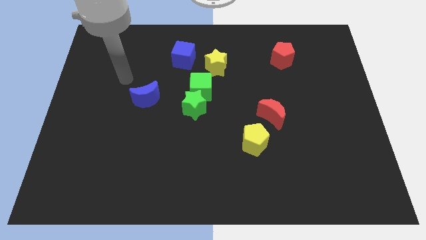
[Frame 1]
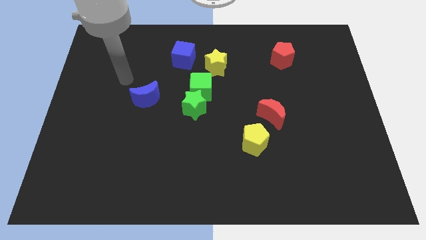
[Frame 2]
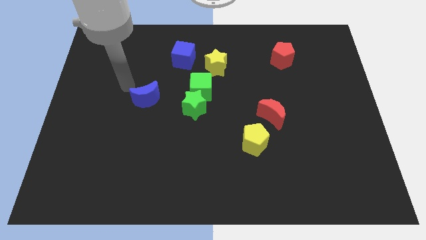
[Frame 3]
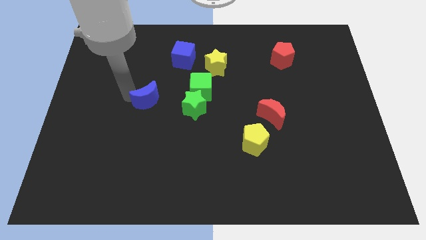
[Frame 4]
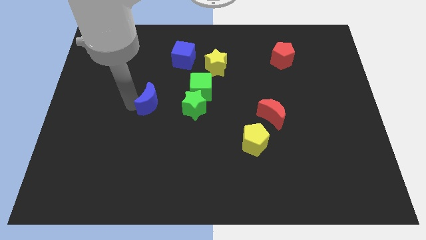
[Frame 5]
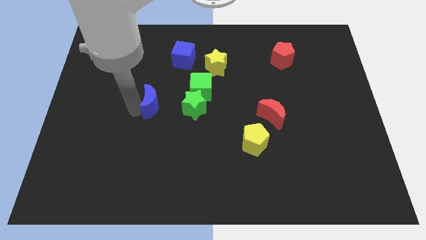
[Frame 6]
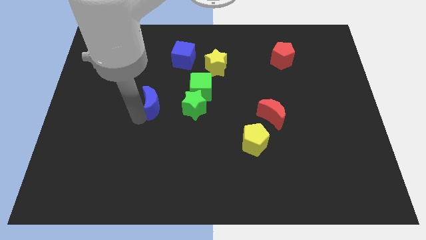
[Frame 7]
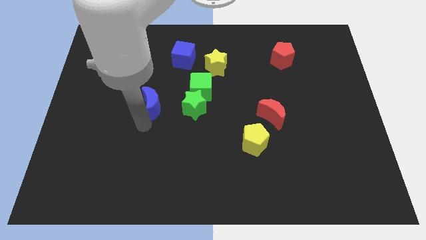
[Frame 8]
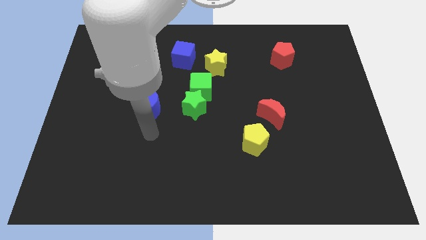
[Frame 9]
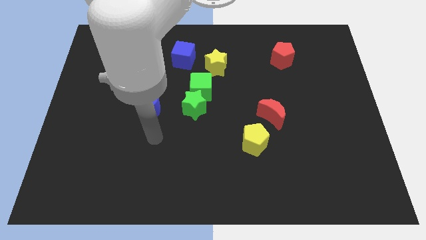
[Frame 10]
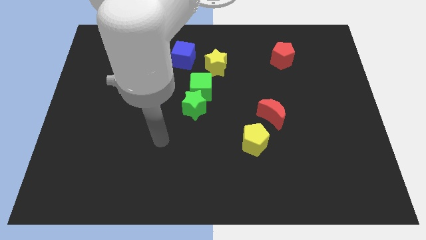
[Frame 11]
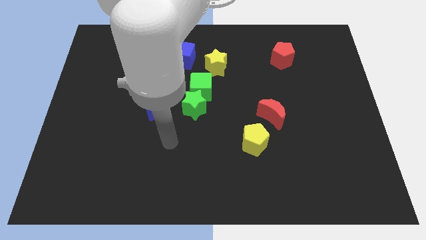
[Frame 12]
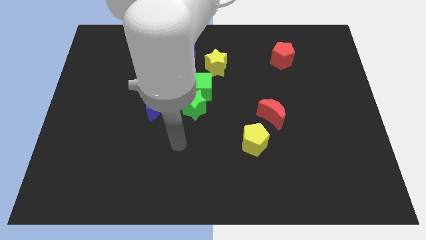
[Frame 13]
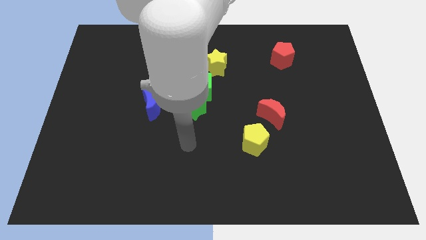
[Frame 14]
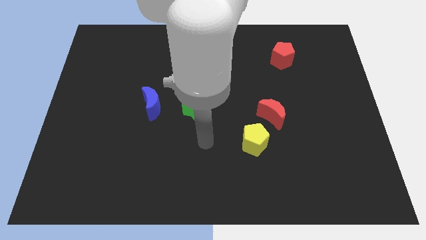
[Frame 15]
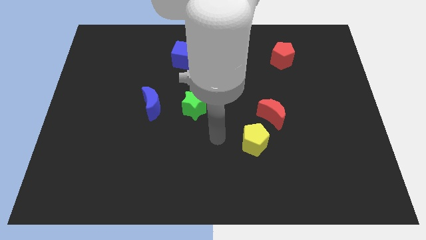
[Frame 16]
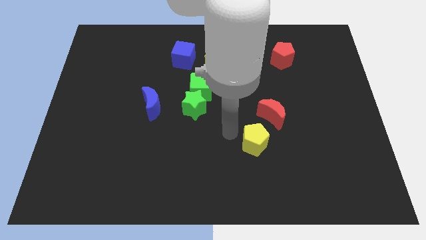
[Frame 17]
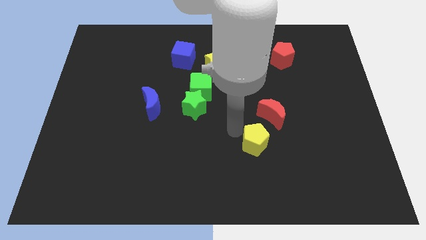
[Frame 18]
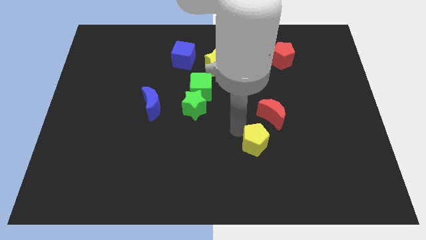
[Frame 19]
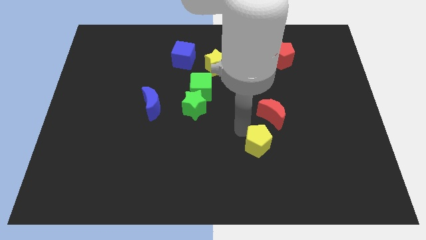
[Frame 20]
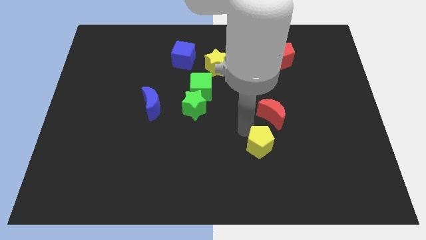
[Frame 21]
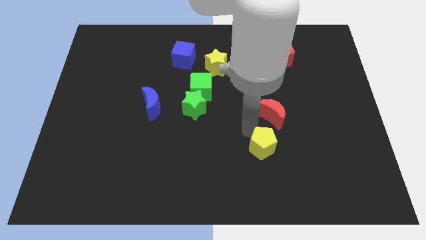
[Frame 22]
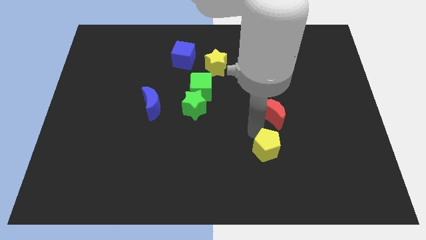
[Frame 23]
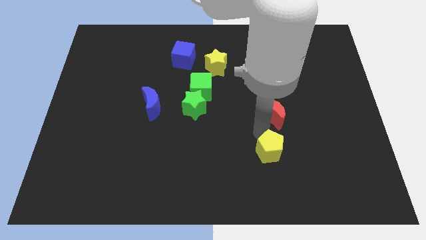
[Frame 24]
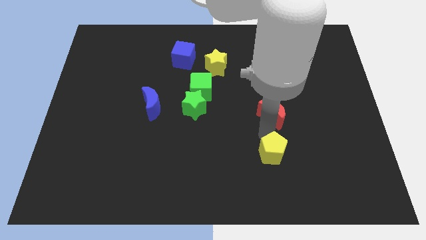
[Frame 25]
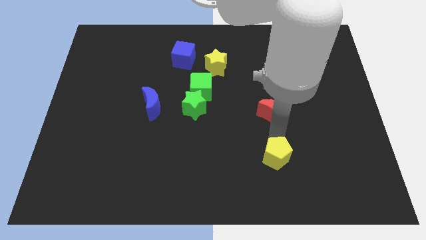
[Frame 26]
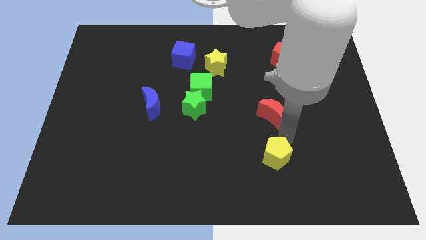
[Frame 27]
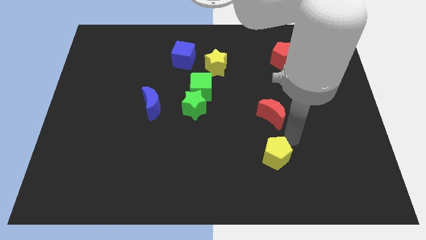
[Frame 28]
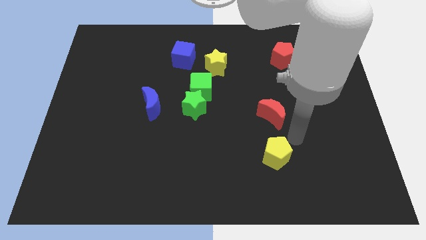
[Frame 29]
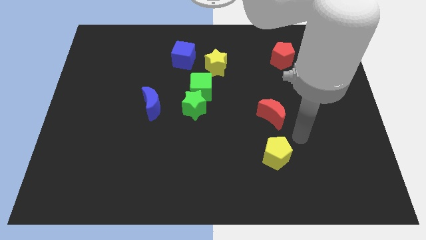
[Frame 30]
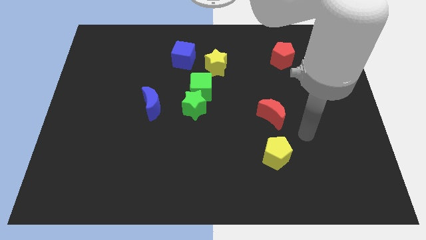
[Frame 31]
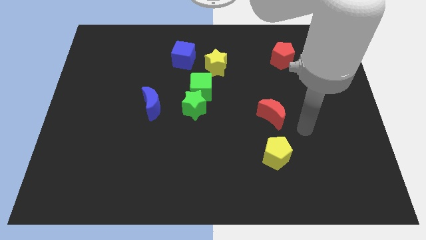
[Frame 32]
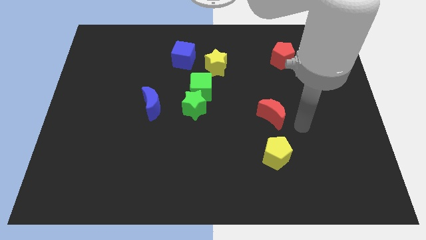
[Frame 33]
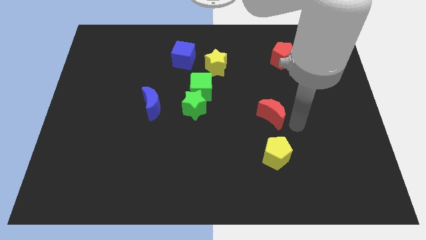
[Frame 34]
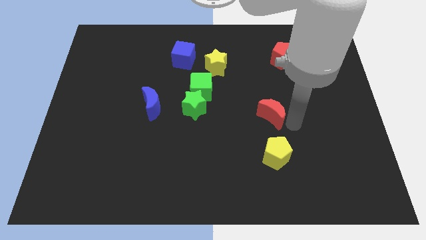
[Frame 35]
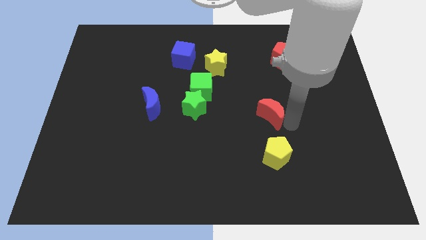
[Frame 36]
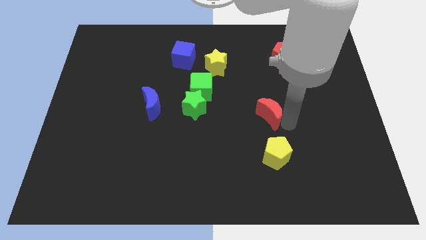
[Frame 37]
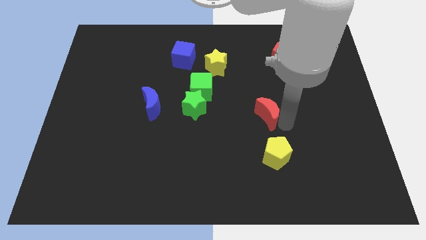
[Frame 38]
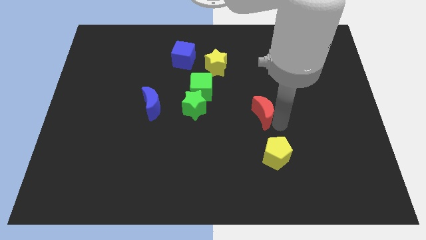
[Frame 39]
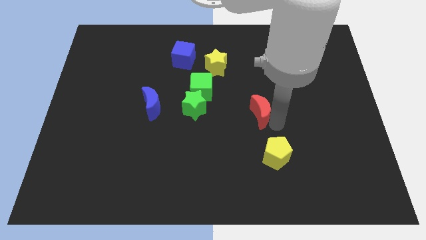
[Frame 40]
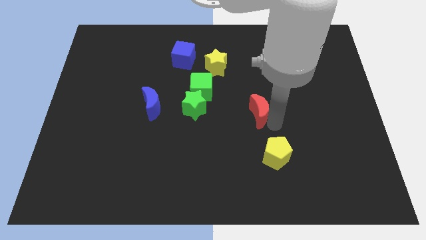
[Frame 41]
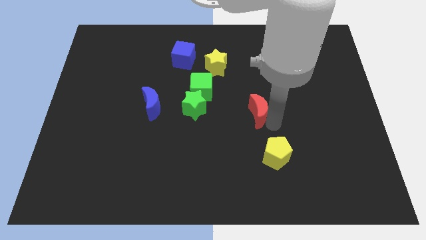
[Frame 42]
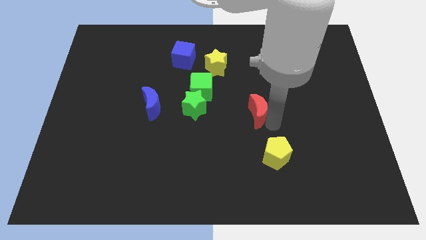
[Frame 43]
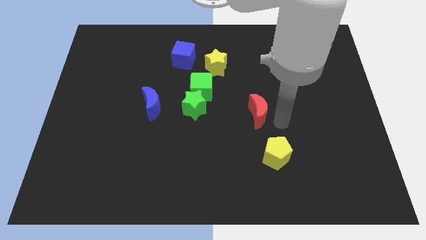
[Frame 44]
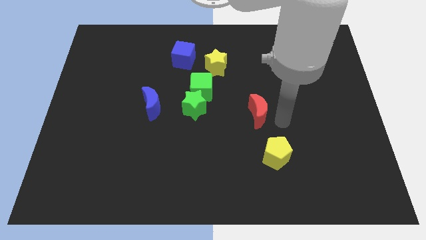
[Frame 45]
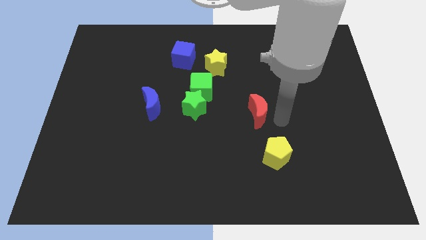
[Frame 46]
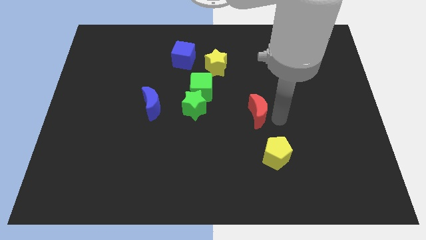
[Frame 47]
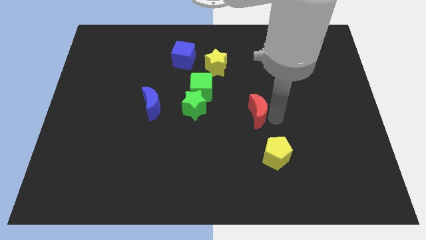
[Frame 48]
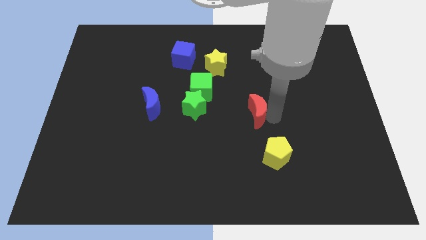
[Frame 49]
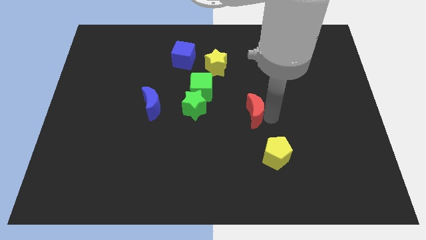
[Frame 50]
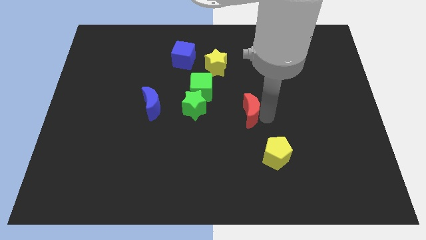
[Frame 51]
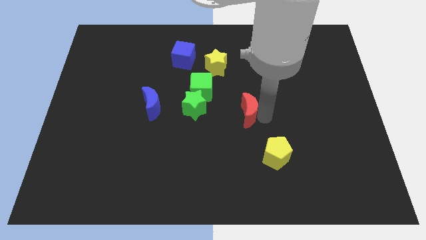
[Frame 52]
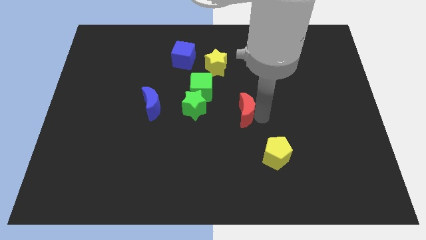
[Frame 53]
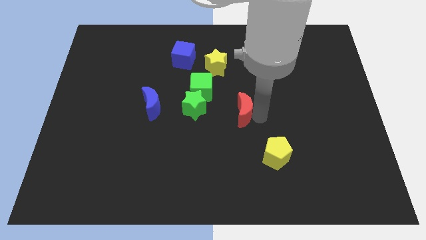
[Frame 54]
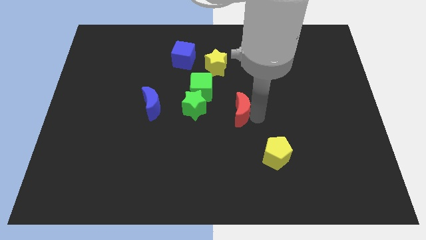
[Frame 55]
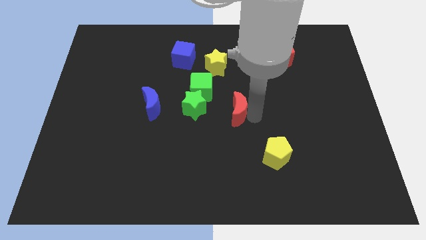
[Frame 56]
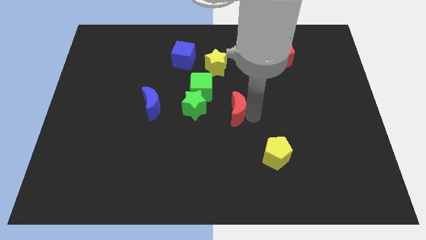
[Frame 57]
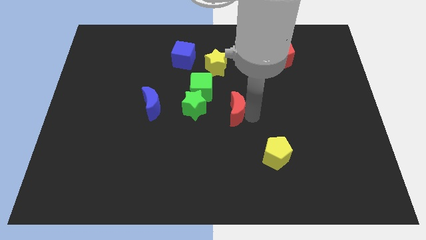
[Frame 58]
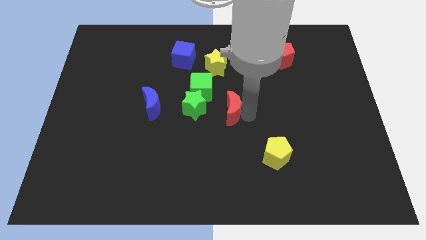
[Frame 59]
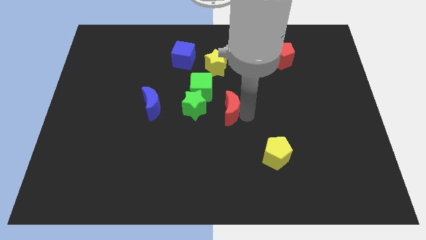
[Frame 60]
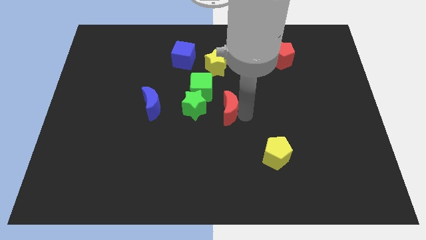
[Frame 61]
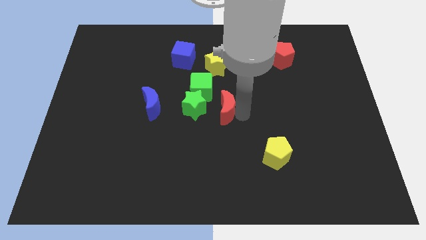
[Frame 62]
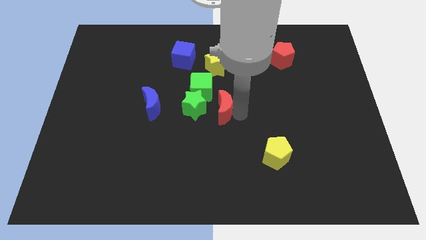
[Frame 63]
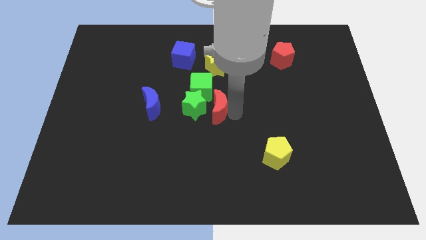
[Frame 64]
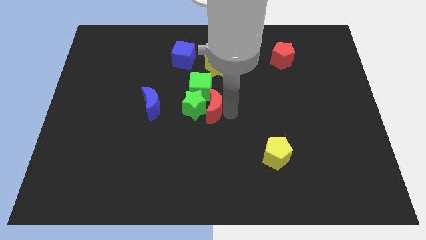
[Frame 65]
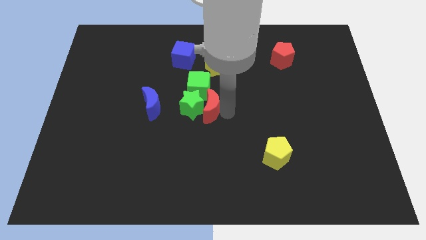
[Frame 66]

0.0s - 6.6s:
push the red moon close to the green star

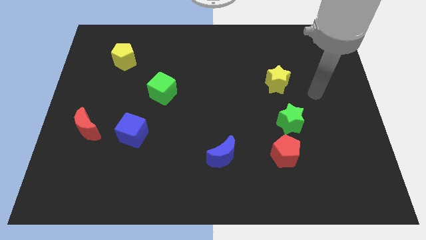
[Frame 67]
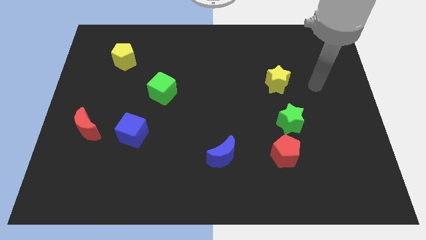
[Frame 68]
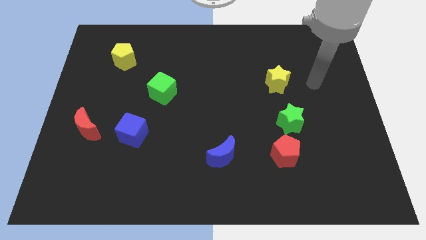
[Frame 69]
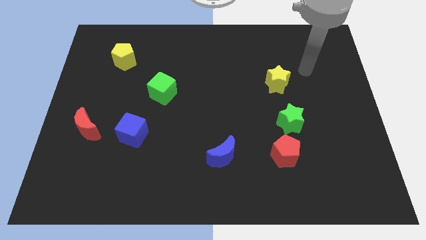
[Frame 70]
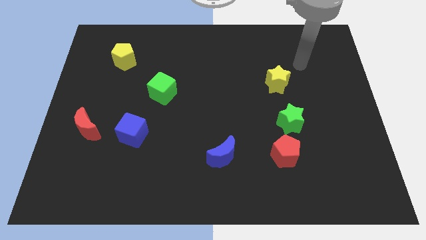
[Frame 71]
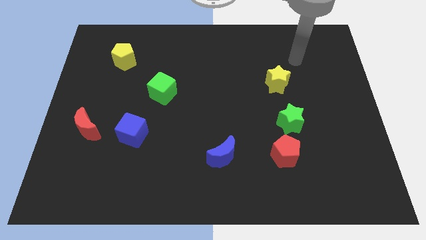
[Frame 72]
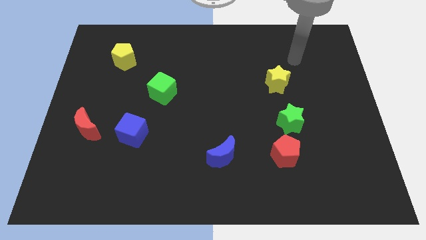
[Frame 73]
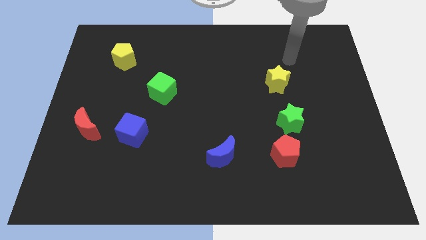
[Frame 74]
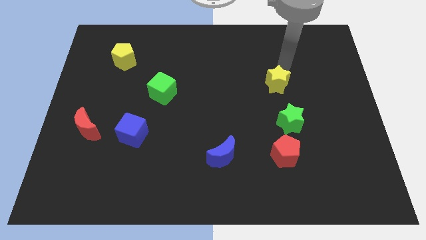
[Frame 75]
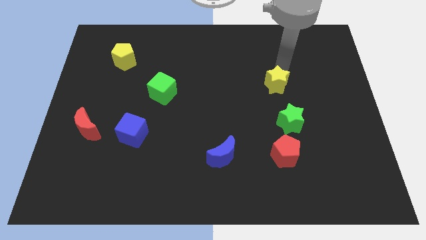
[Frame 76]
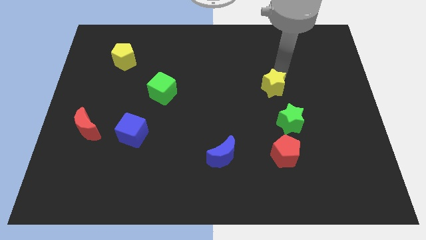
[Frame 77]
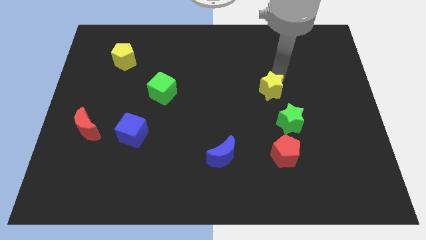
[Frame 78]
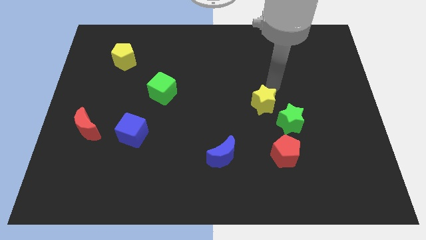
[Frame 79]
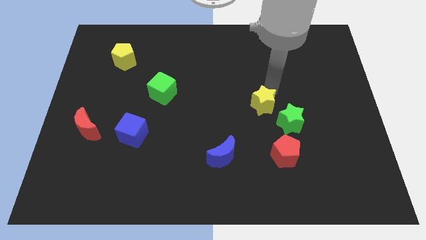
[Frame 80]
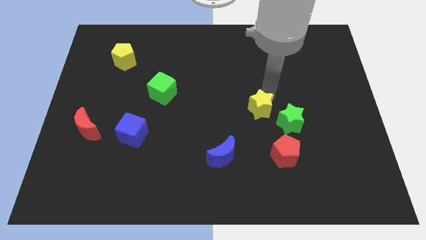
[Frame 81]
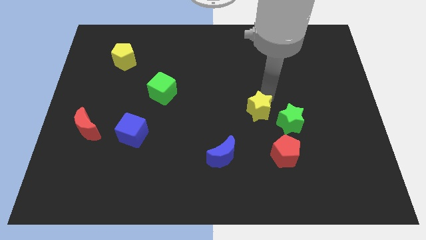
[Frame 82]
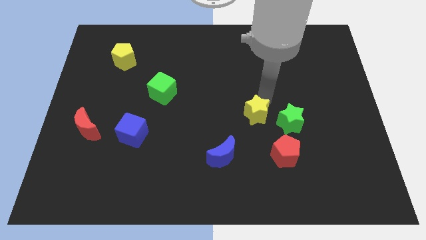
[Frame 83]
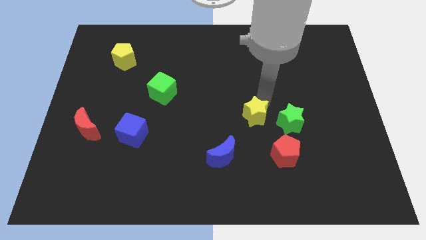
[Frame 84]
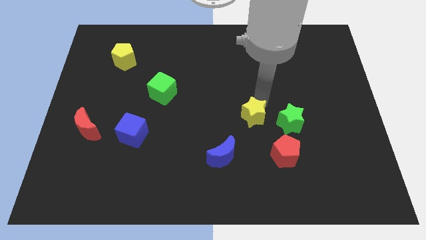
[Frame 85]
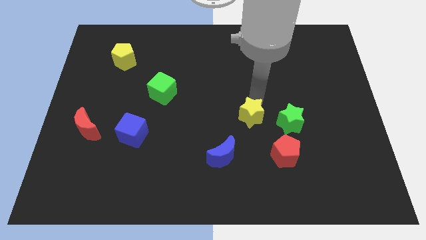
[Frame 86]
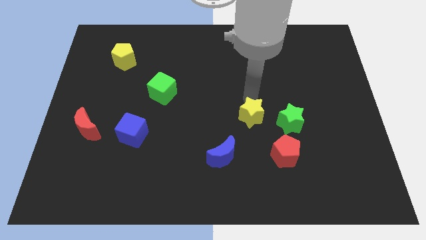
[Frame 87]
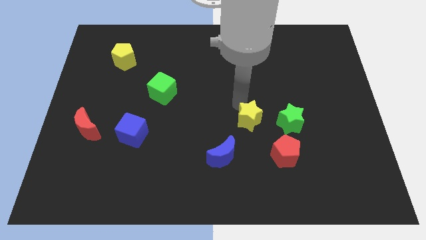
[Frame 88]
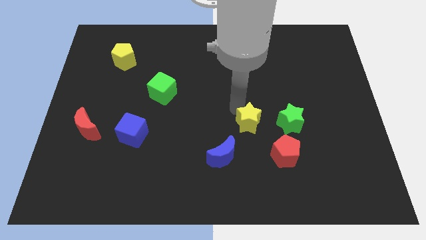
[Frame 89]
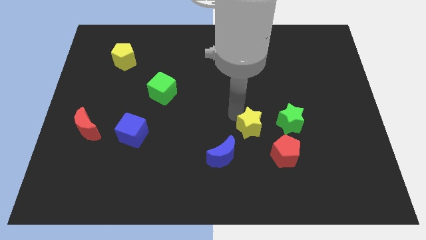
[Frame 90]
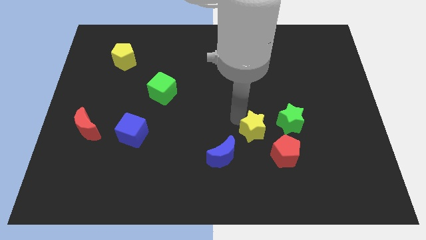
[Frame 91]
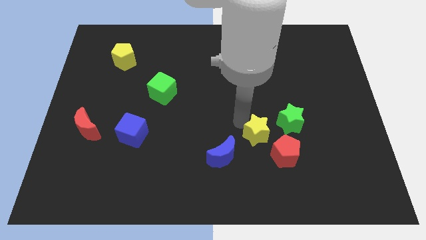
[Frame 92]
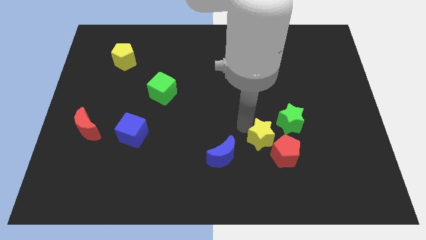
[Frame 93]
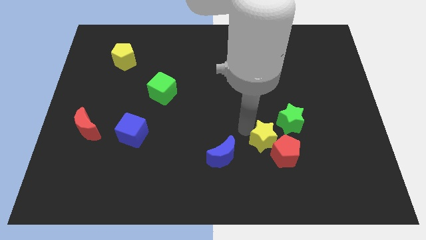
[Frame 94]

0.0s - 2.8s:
put the yellow star towards the red pentagon
